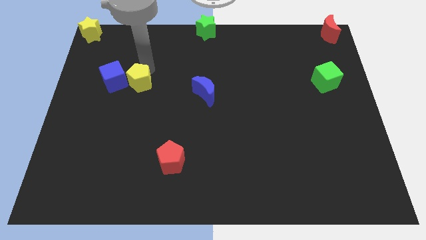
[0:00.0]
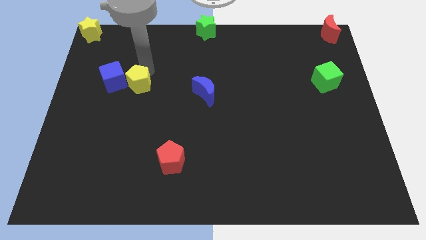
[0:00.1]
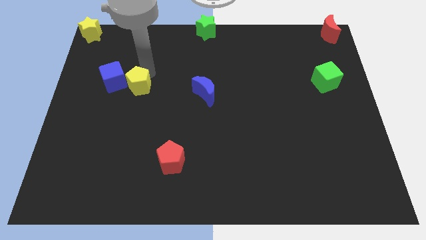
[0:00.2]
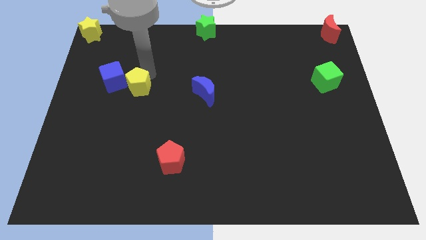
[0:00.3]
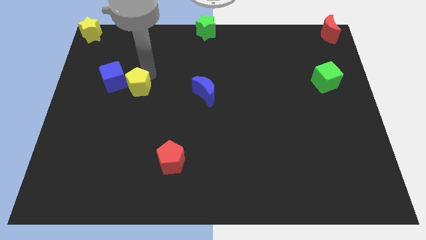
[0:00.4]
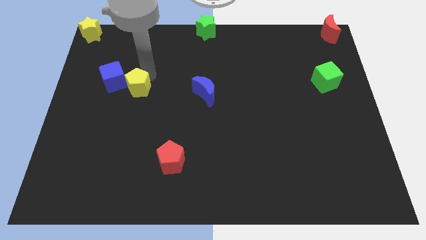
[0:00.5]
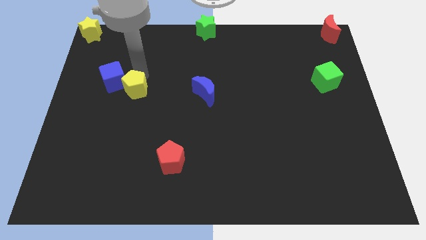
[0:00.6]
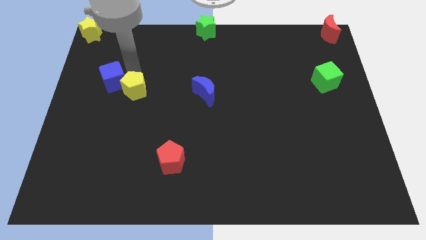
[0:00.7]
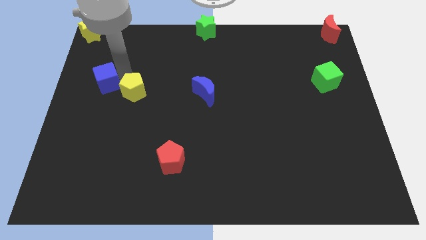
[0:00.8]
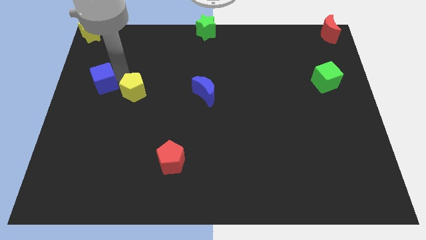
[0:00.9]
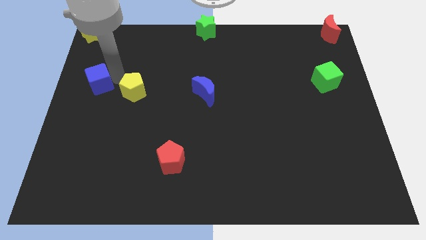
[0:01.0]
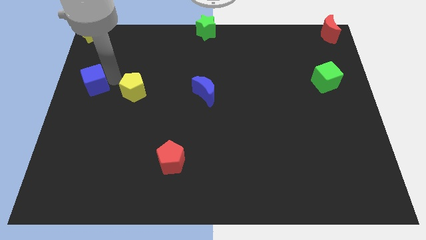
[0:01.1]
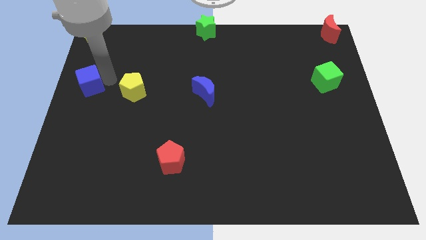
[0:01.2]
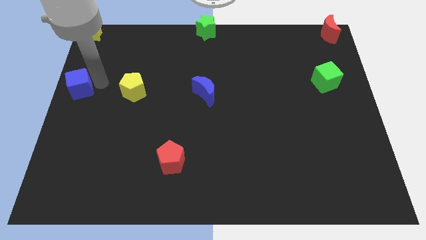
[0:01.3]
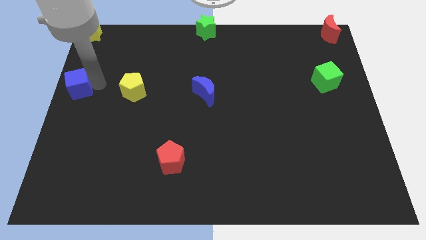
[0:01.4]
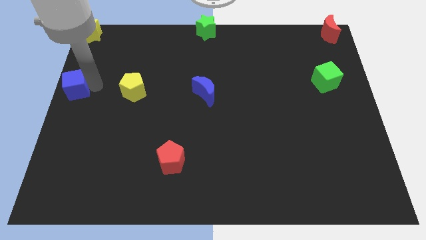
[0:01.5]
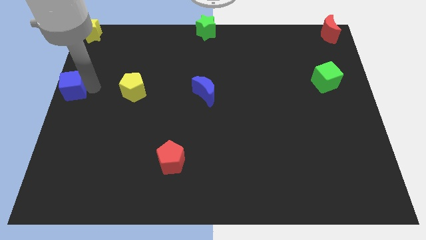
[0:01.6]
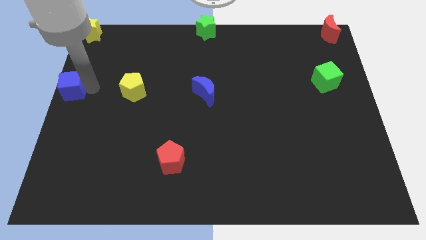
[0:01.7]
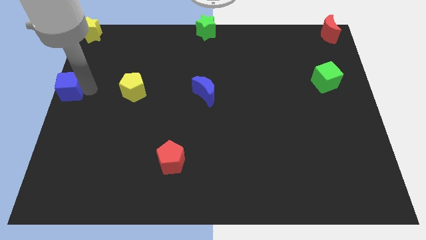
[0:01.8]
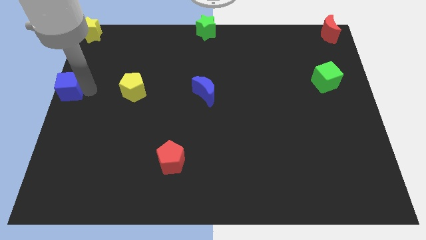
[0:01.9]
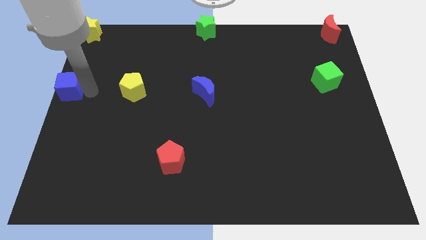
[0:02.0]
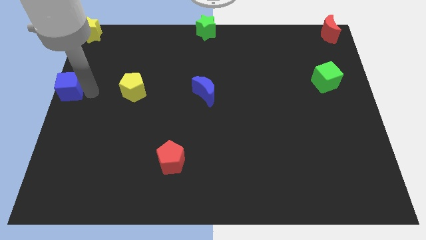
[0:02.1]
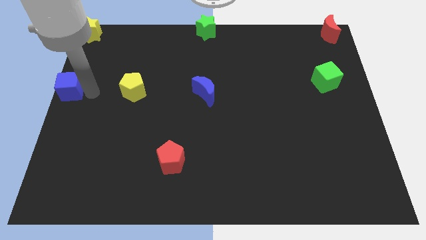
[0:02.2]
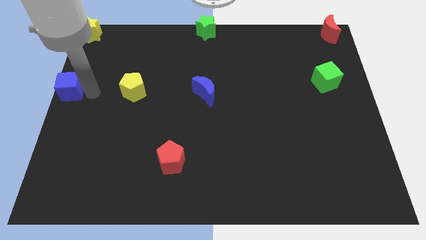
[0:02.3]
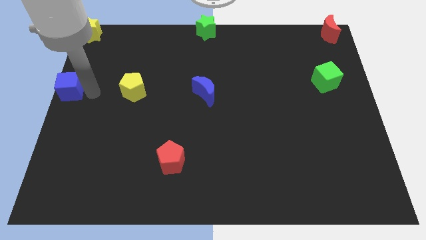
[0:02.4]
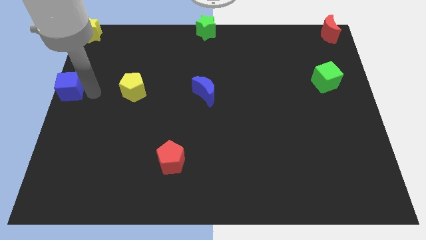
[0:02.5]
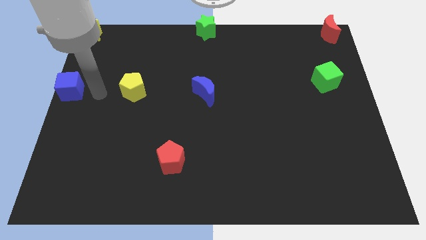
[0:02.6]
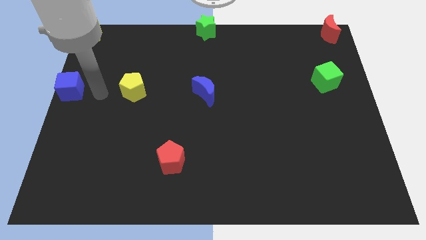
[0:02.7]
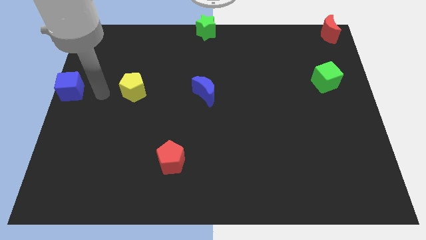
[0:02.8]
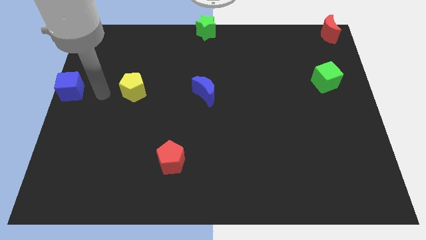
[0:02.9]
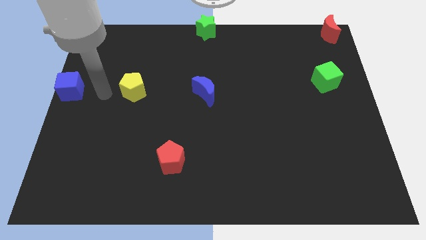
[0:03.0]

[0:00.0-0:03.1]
place blue cube to the center left

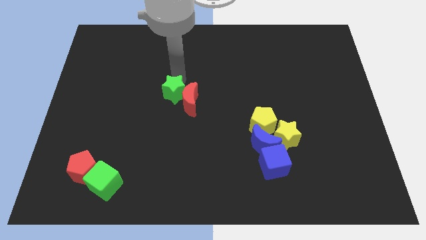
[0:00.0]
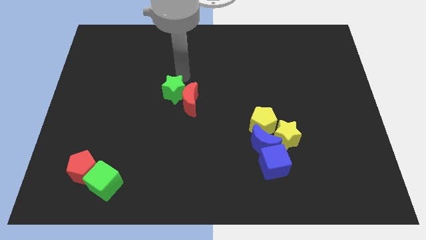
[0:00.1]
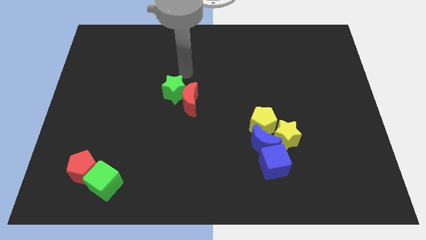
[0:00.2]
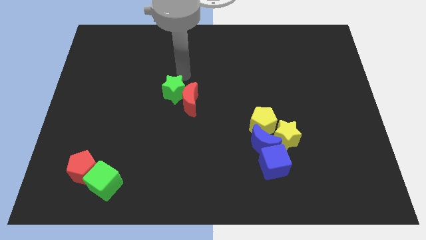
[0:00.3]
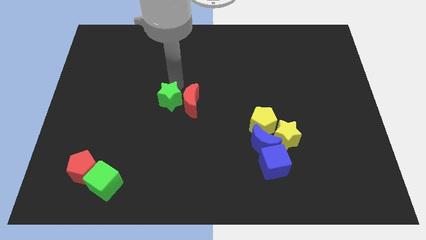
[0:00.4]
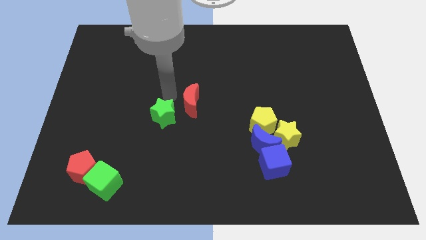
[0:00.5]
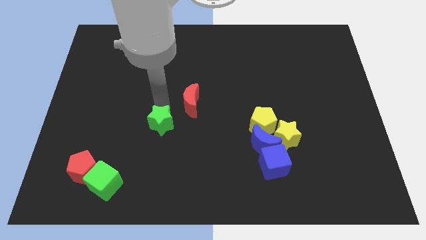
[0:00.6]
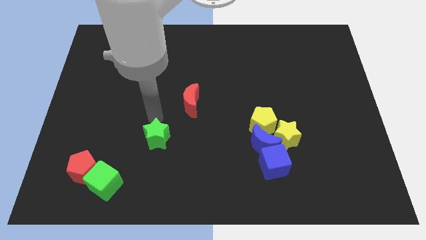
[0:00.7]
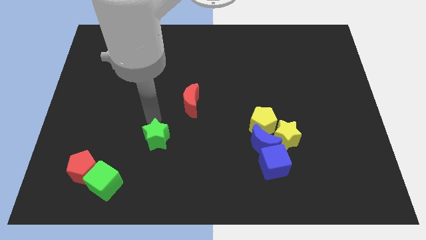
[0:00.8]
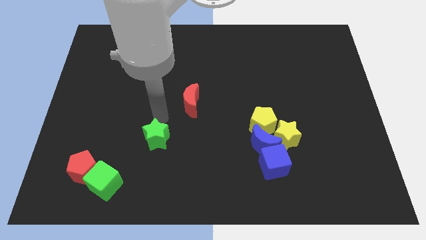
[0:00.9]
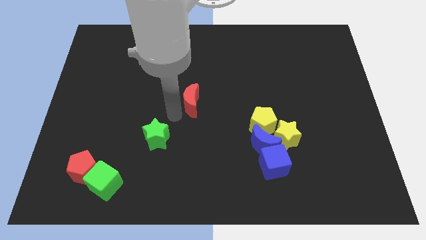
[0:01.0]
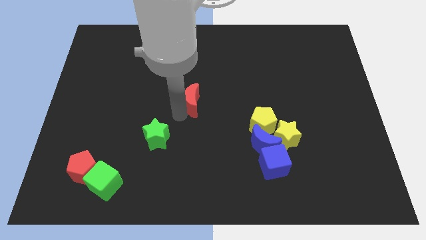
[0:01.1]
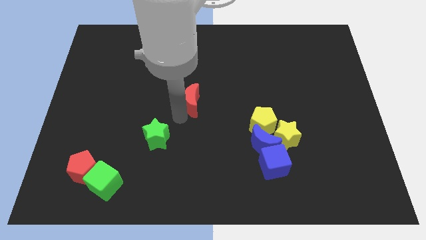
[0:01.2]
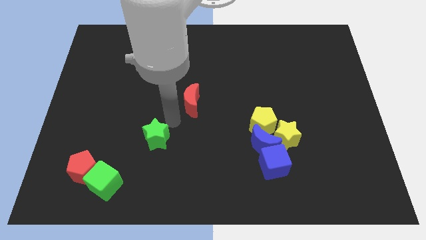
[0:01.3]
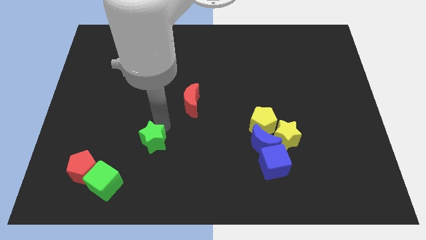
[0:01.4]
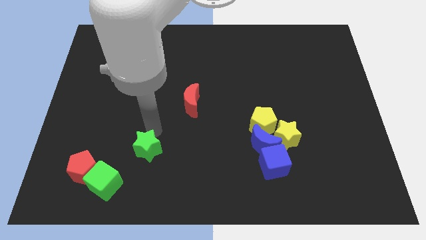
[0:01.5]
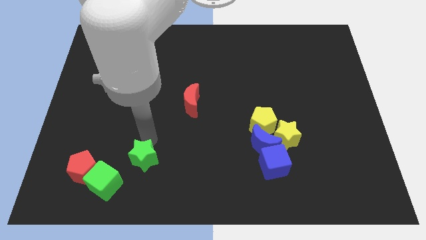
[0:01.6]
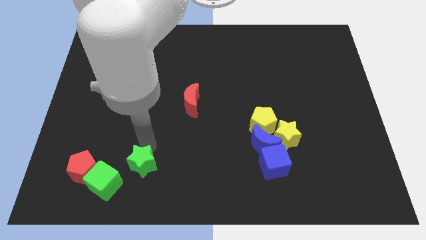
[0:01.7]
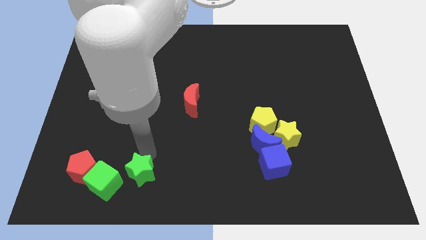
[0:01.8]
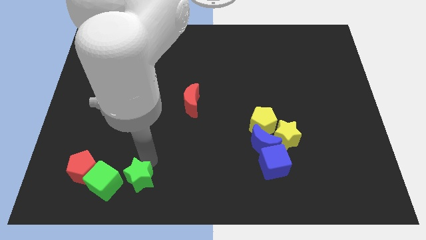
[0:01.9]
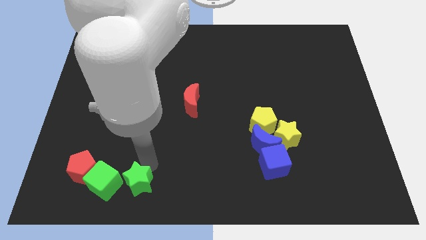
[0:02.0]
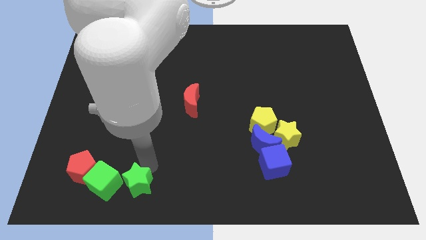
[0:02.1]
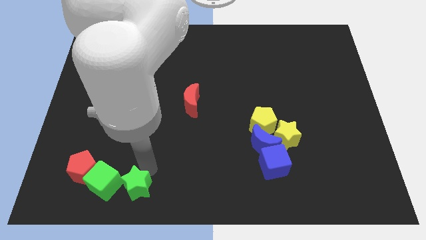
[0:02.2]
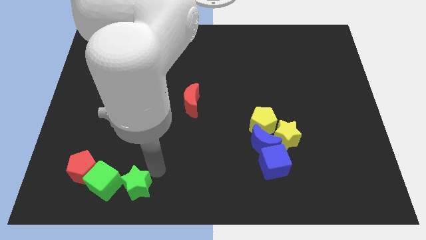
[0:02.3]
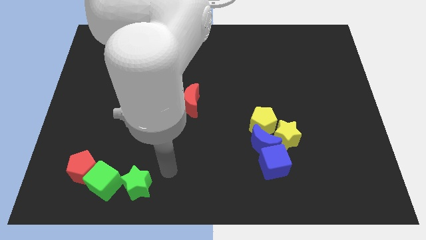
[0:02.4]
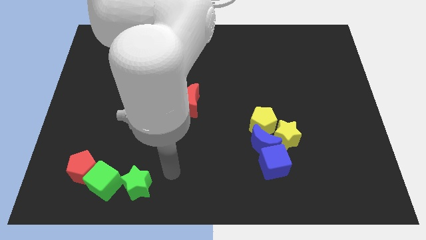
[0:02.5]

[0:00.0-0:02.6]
move the green star right beside the green cube

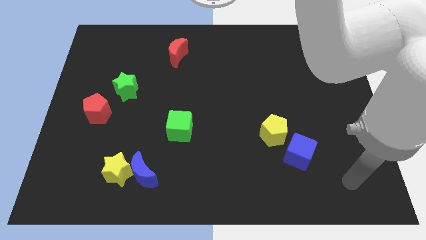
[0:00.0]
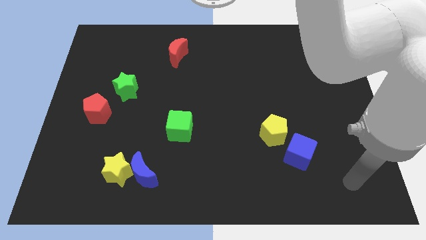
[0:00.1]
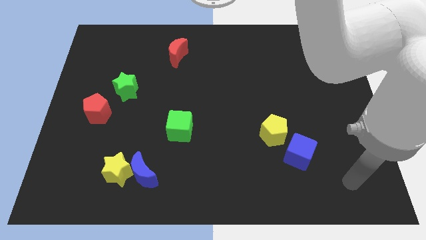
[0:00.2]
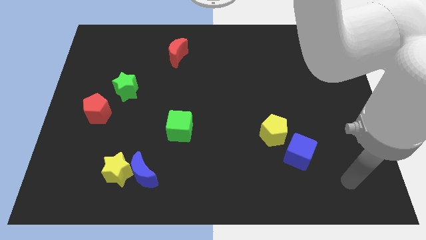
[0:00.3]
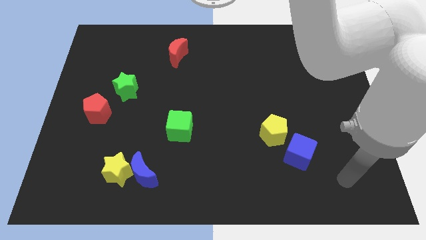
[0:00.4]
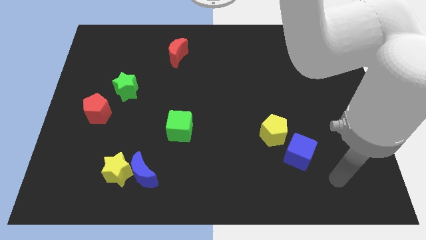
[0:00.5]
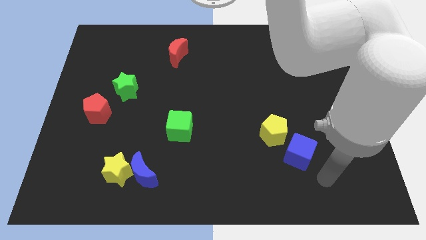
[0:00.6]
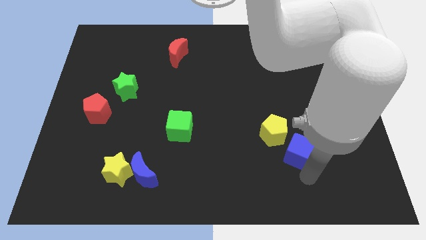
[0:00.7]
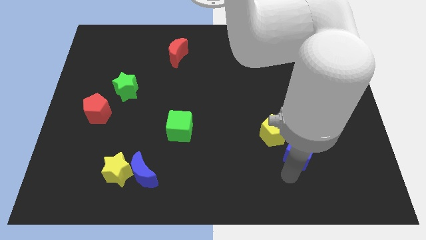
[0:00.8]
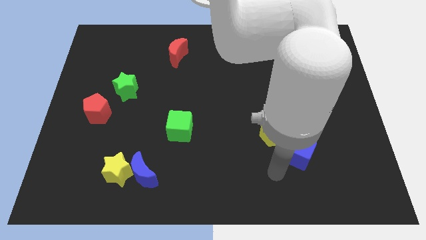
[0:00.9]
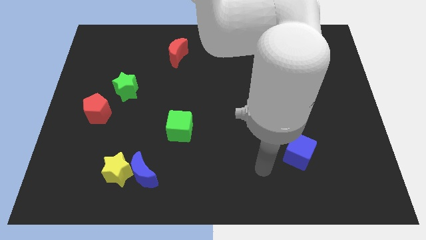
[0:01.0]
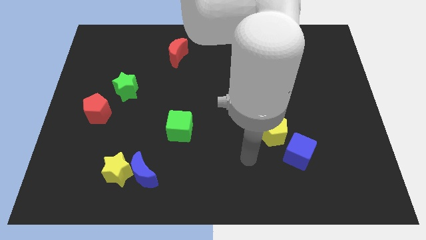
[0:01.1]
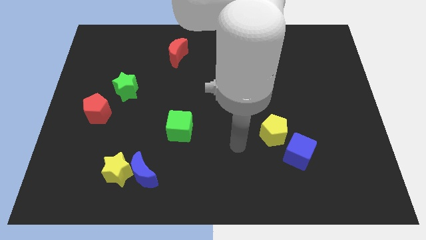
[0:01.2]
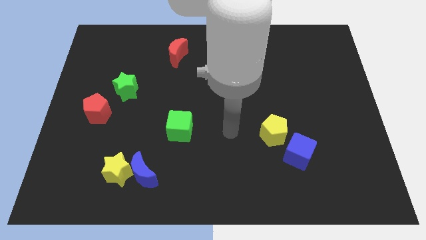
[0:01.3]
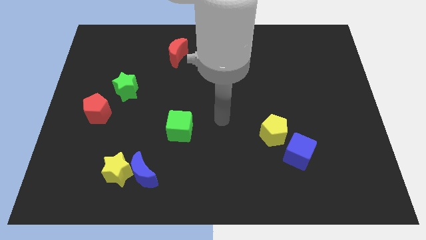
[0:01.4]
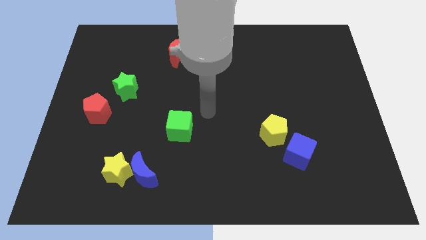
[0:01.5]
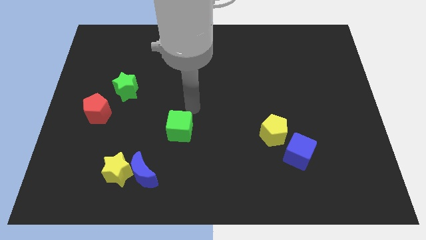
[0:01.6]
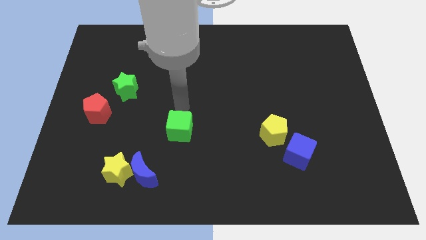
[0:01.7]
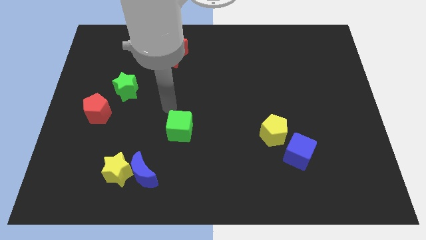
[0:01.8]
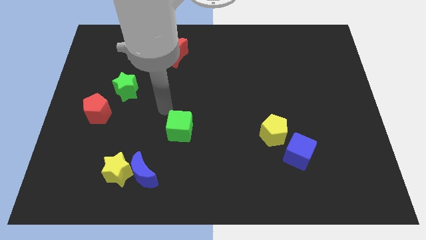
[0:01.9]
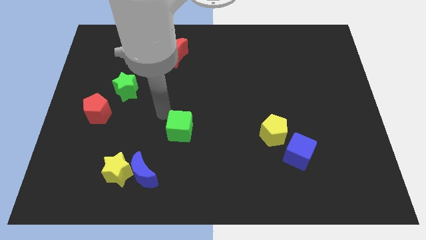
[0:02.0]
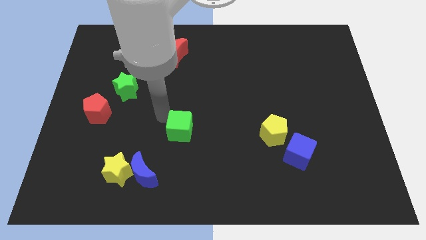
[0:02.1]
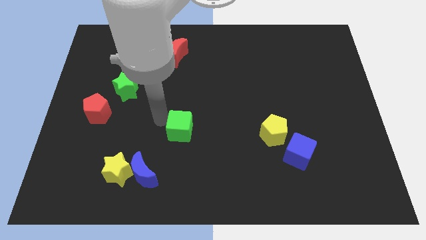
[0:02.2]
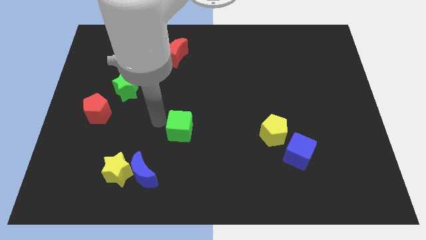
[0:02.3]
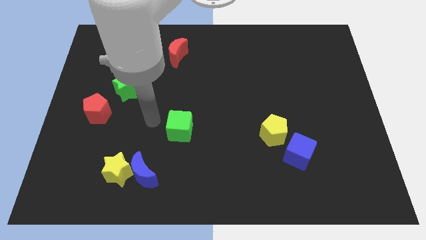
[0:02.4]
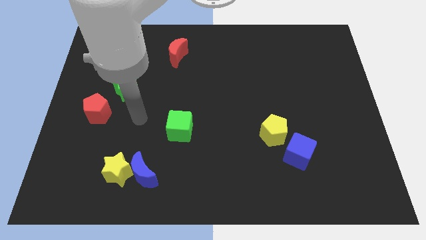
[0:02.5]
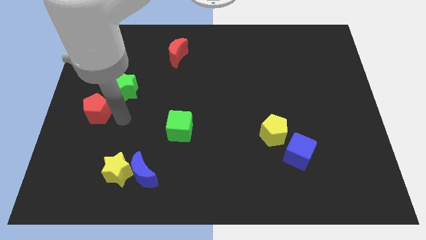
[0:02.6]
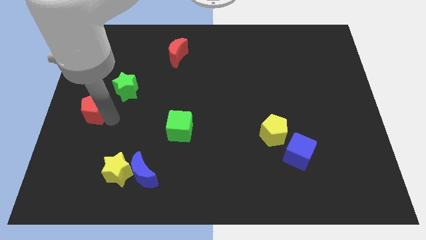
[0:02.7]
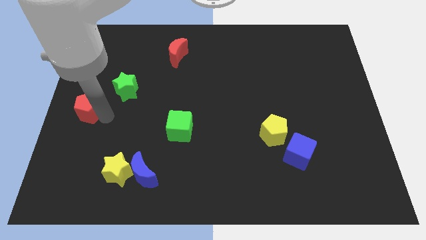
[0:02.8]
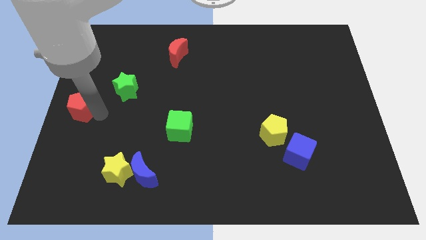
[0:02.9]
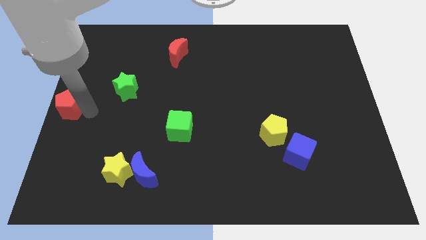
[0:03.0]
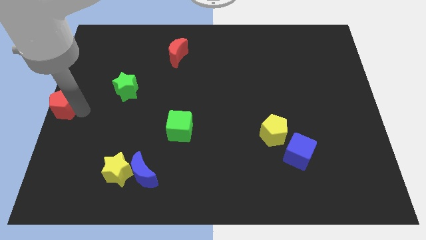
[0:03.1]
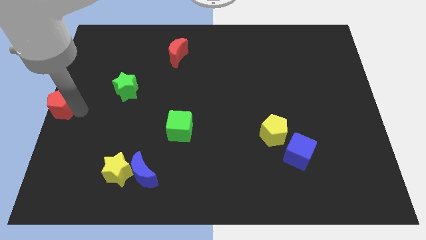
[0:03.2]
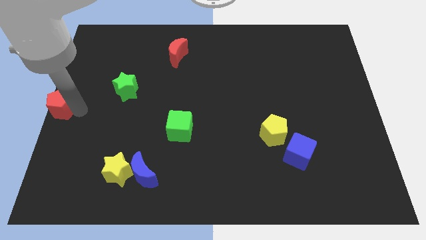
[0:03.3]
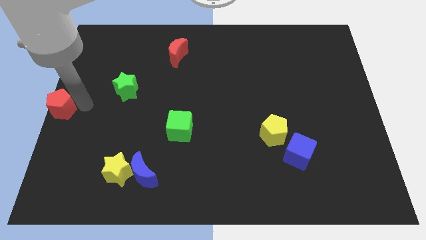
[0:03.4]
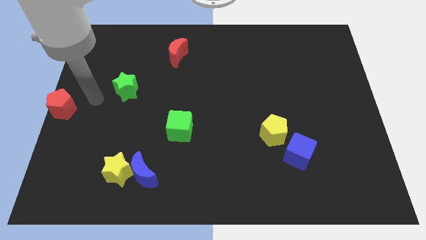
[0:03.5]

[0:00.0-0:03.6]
move the red pentagon to the center left side of the board
